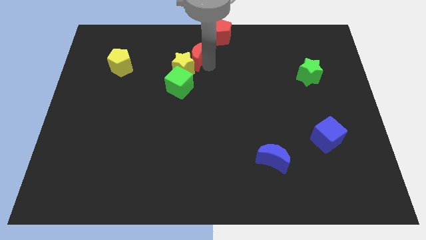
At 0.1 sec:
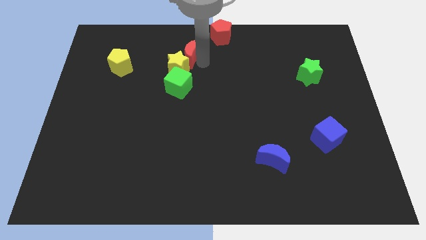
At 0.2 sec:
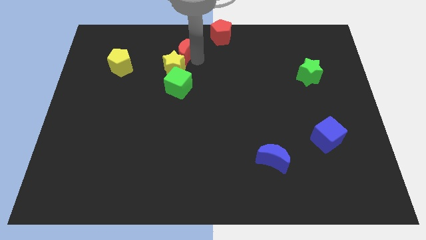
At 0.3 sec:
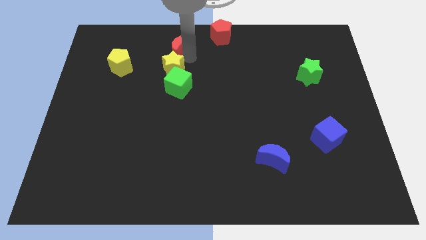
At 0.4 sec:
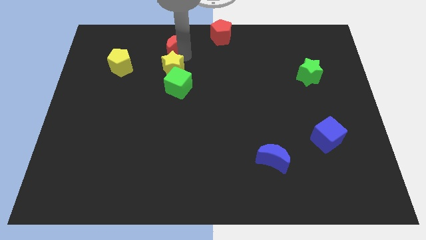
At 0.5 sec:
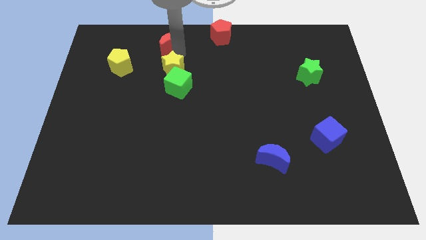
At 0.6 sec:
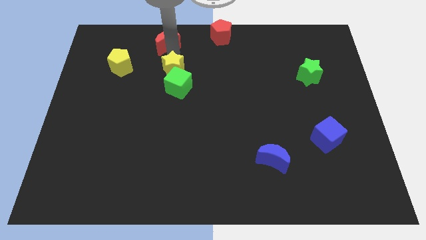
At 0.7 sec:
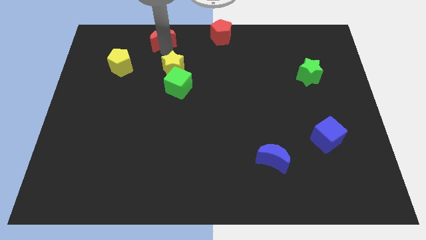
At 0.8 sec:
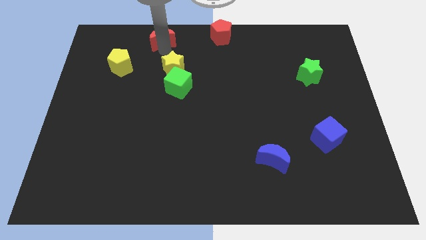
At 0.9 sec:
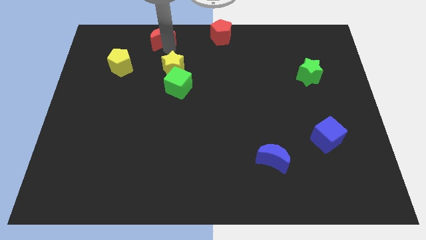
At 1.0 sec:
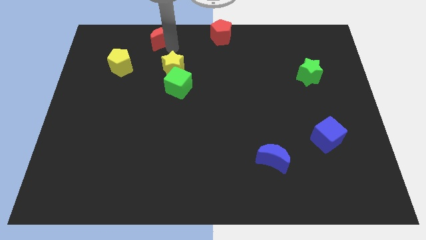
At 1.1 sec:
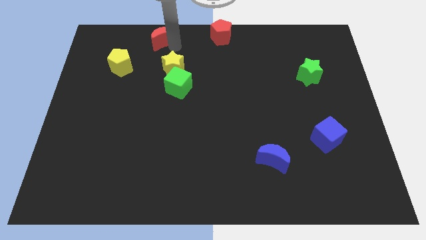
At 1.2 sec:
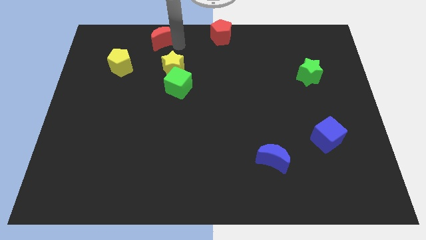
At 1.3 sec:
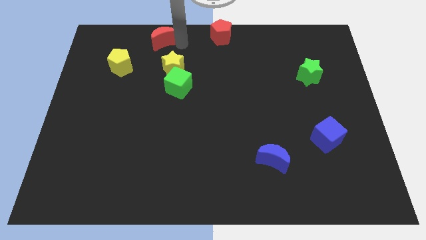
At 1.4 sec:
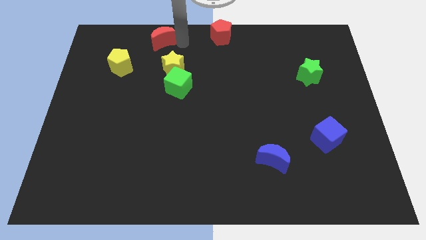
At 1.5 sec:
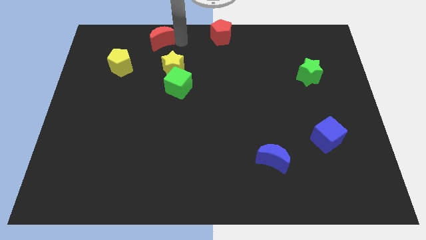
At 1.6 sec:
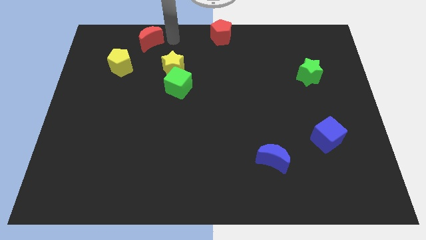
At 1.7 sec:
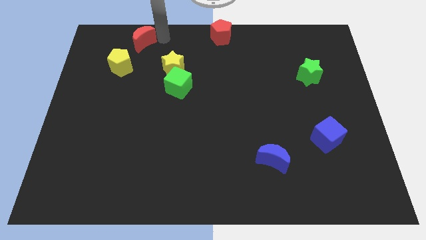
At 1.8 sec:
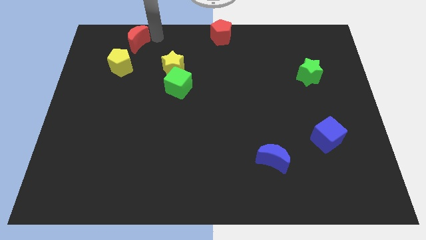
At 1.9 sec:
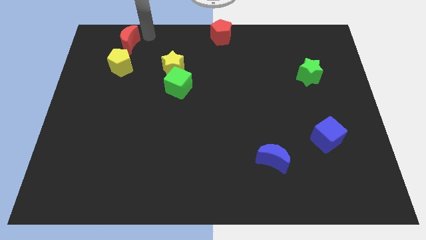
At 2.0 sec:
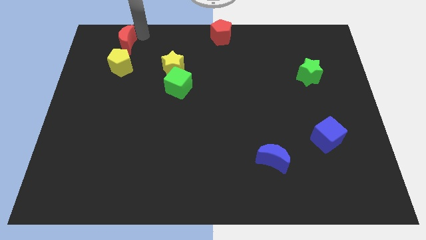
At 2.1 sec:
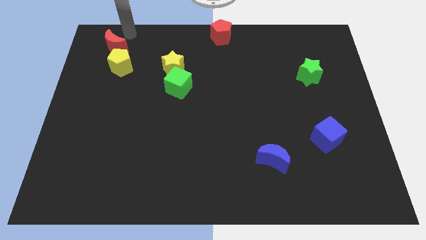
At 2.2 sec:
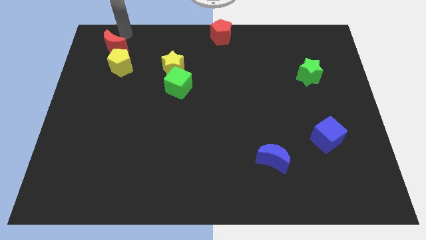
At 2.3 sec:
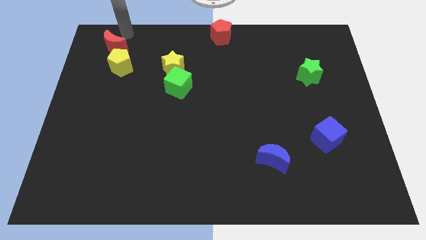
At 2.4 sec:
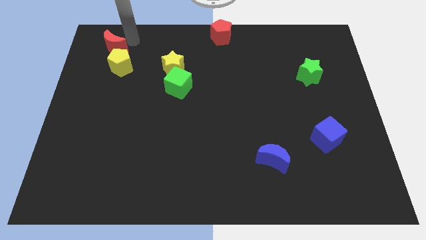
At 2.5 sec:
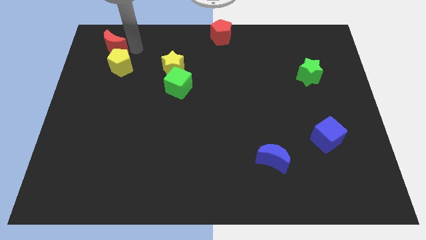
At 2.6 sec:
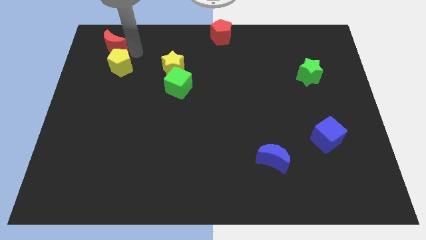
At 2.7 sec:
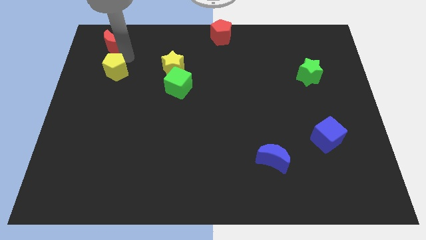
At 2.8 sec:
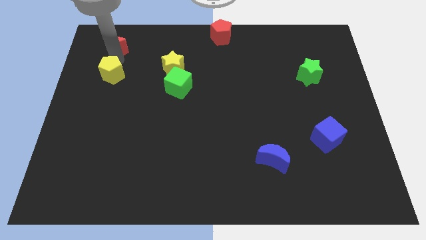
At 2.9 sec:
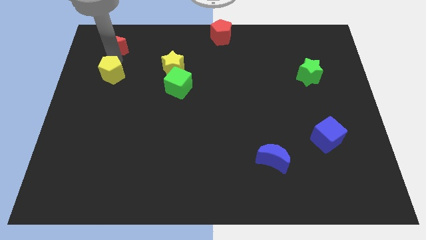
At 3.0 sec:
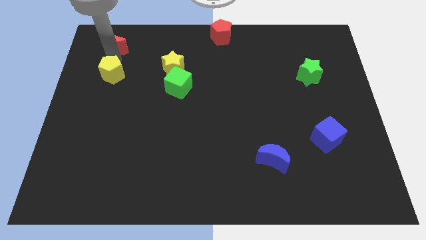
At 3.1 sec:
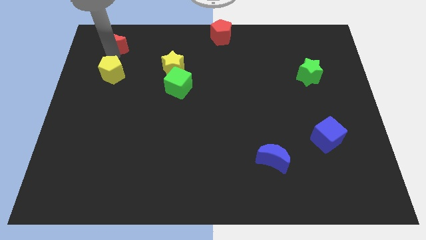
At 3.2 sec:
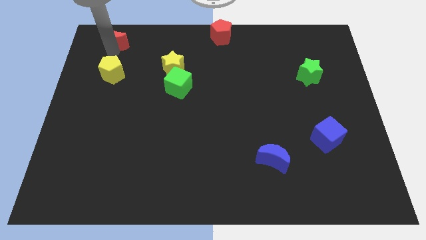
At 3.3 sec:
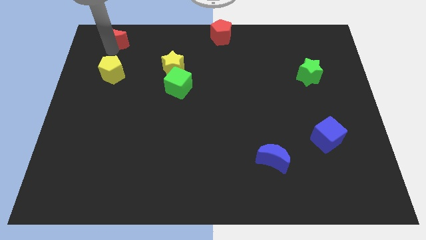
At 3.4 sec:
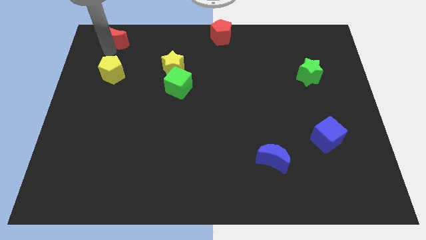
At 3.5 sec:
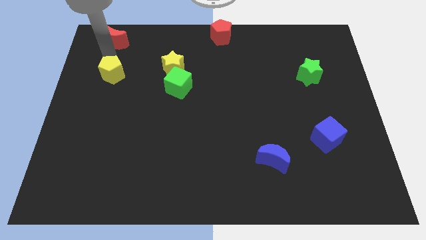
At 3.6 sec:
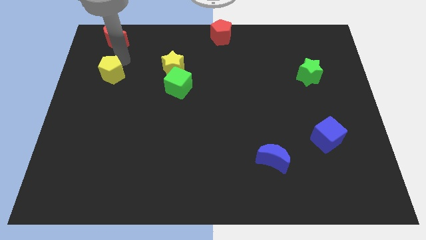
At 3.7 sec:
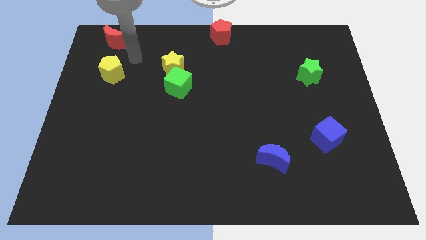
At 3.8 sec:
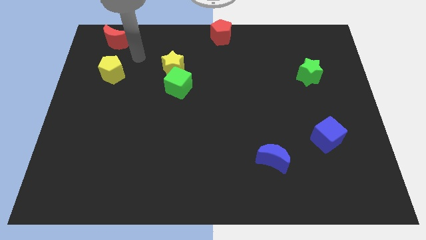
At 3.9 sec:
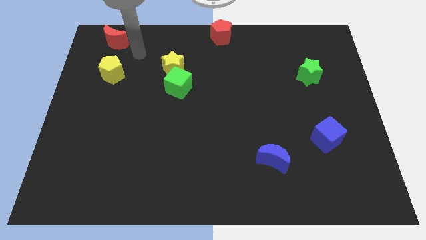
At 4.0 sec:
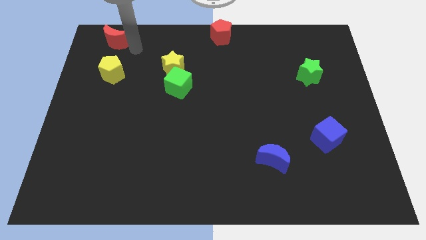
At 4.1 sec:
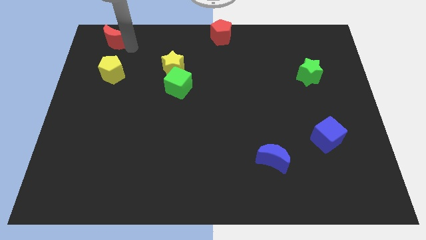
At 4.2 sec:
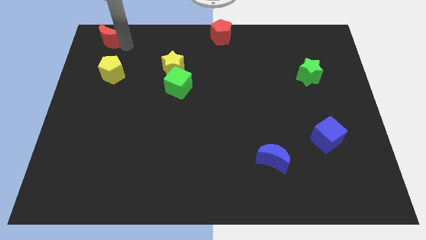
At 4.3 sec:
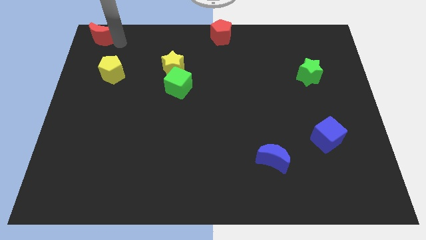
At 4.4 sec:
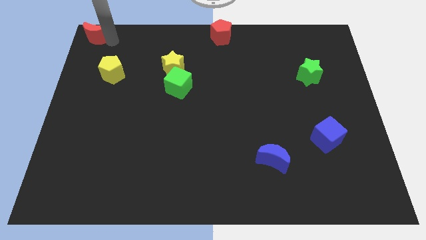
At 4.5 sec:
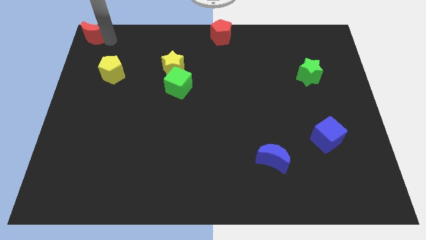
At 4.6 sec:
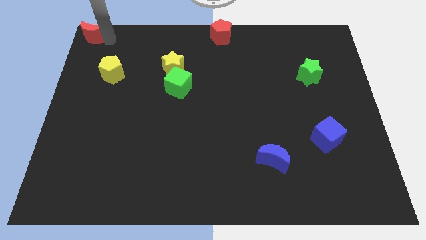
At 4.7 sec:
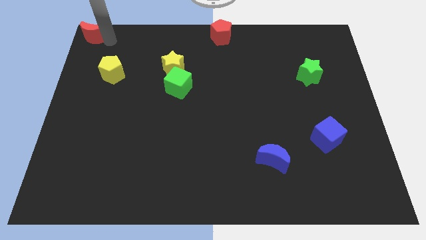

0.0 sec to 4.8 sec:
move the red crescent to the top left corner of the board

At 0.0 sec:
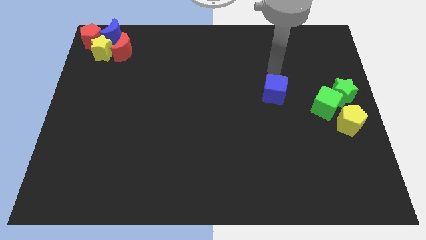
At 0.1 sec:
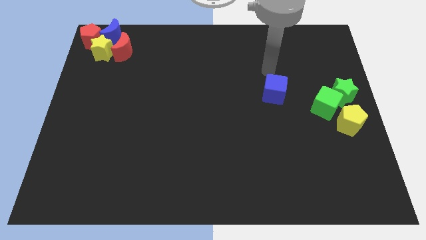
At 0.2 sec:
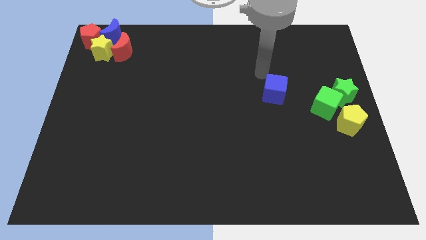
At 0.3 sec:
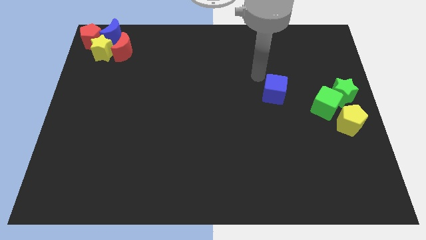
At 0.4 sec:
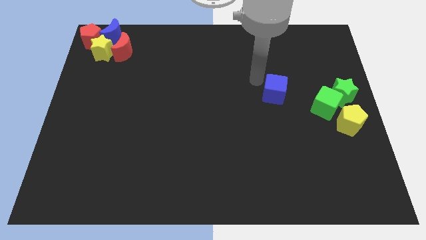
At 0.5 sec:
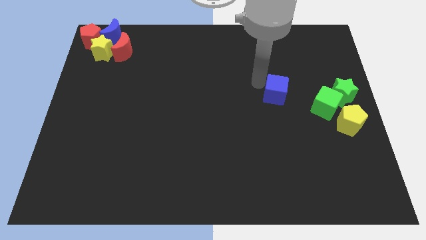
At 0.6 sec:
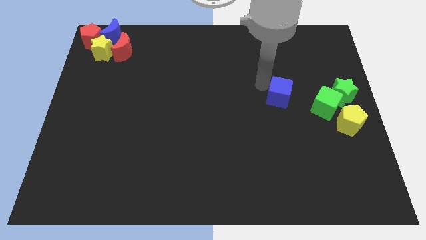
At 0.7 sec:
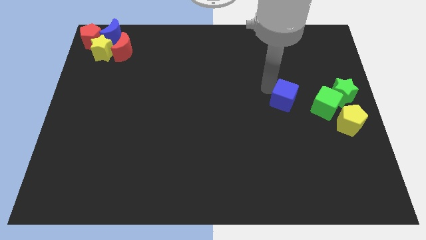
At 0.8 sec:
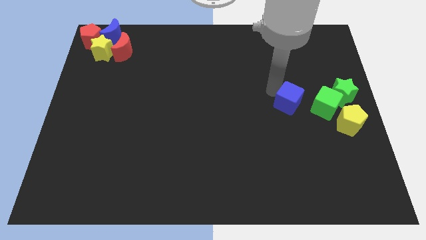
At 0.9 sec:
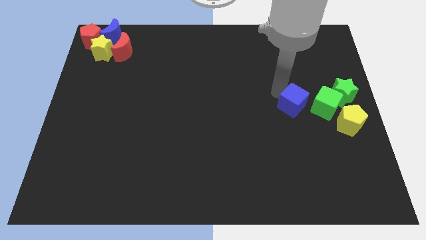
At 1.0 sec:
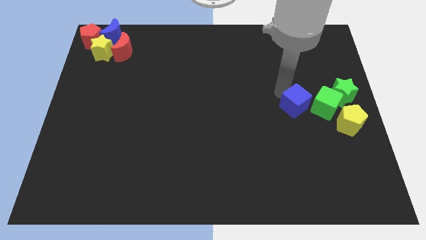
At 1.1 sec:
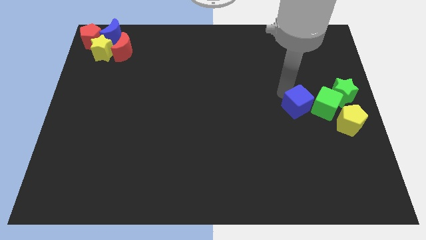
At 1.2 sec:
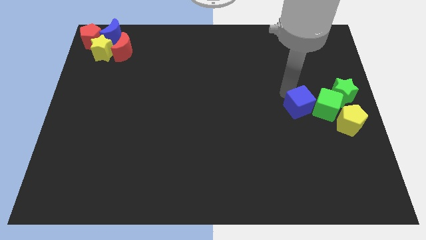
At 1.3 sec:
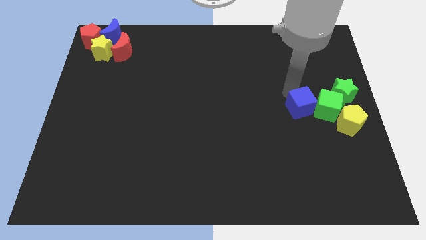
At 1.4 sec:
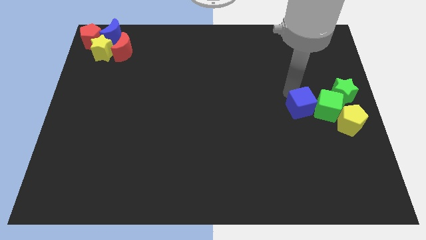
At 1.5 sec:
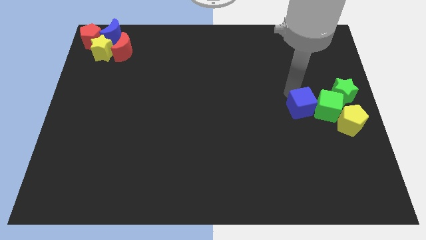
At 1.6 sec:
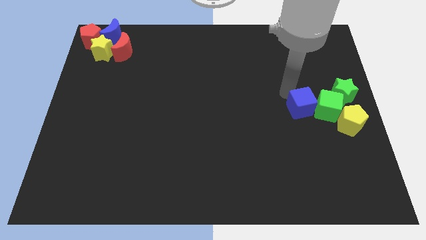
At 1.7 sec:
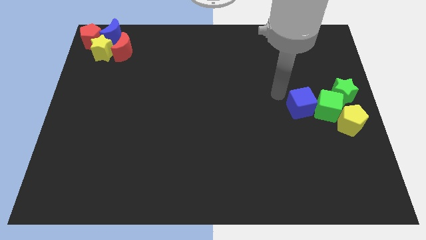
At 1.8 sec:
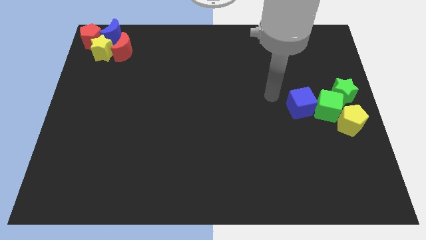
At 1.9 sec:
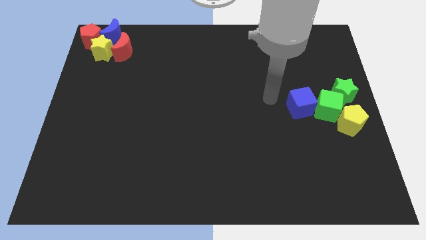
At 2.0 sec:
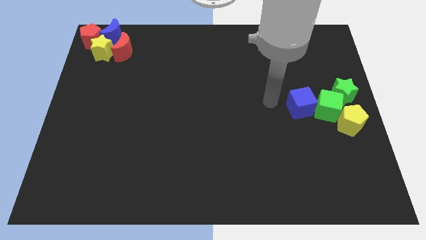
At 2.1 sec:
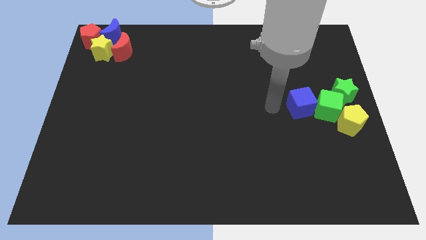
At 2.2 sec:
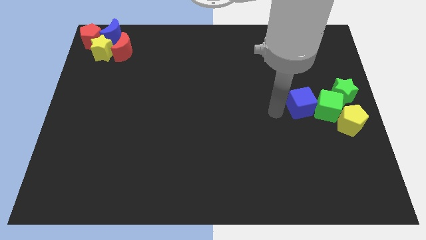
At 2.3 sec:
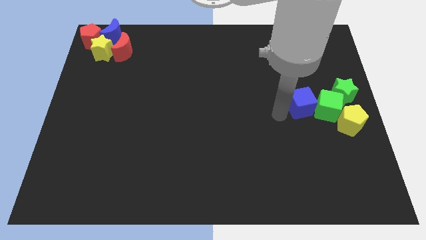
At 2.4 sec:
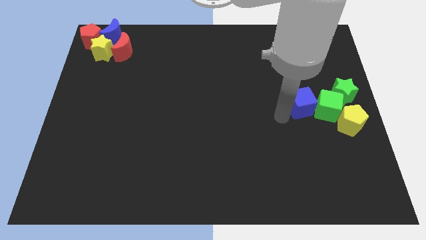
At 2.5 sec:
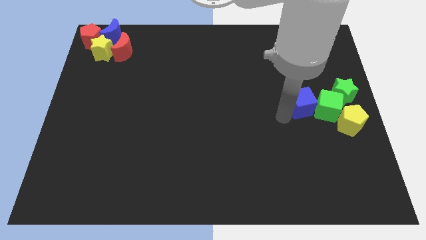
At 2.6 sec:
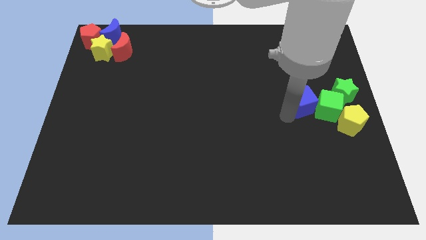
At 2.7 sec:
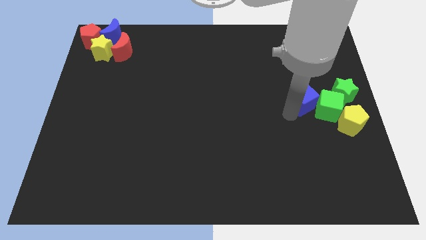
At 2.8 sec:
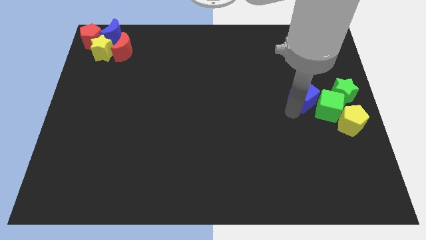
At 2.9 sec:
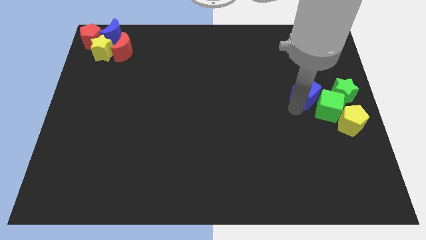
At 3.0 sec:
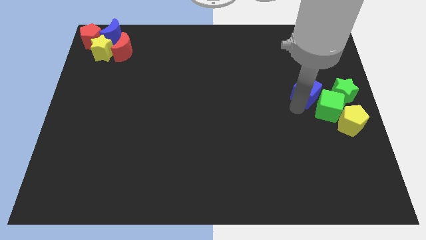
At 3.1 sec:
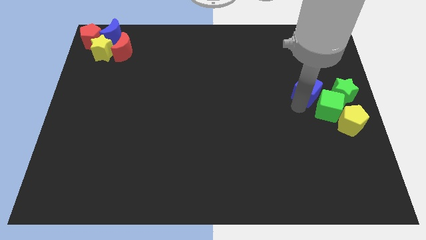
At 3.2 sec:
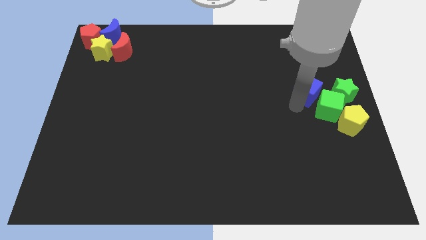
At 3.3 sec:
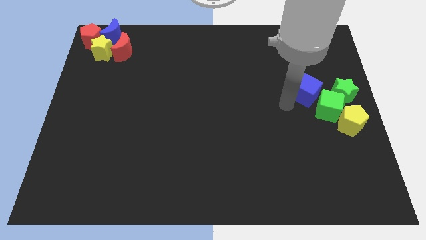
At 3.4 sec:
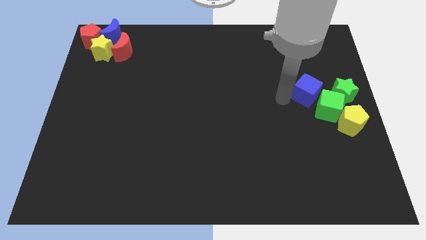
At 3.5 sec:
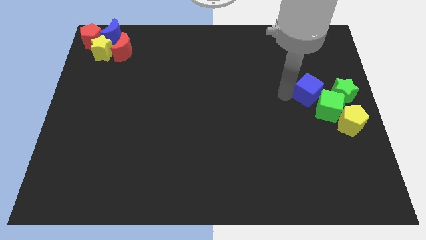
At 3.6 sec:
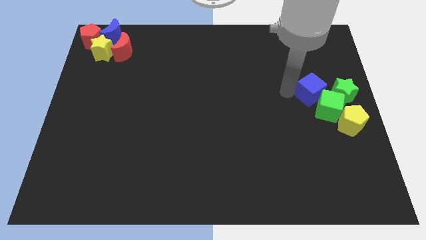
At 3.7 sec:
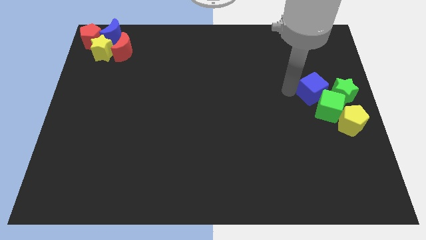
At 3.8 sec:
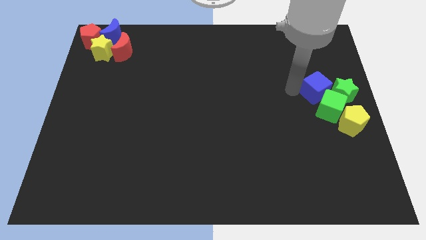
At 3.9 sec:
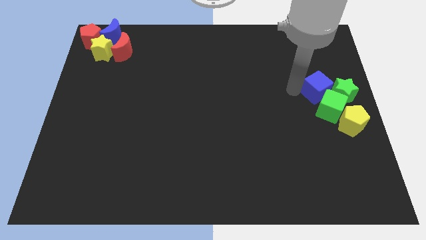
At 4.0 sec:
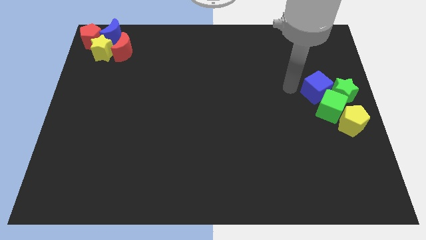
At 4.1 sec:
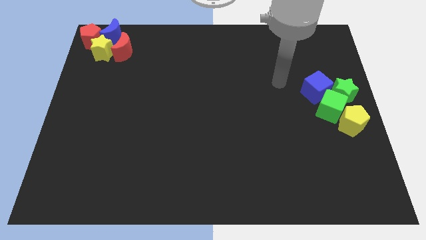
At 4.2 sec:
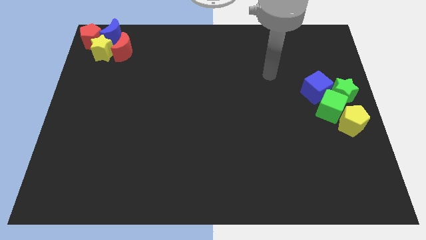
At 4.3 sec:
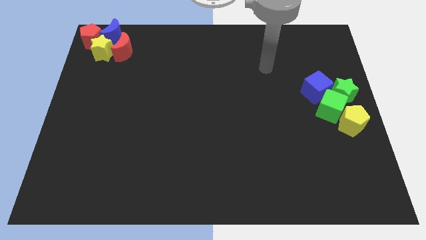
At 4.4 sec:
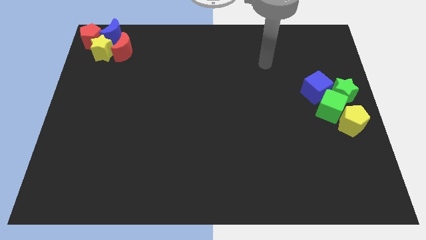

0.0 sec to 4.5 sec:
push the blue cube into the group of blocks
